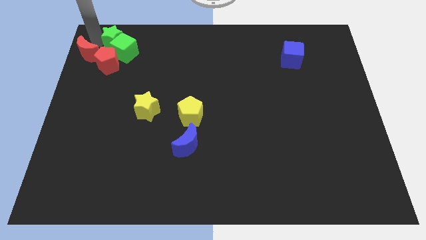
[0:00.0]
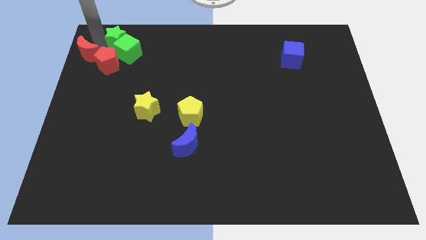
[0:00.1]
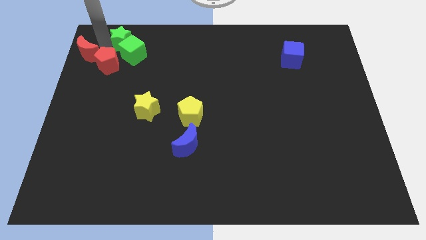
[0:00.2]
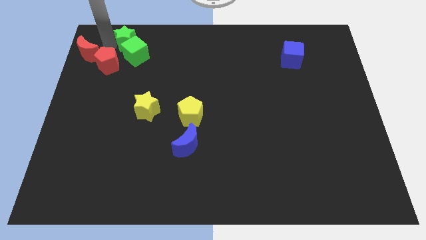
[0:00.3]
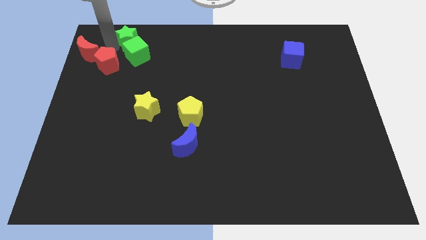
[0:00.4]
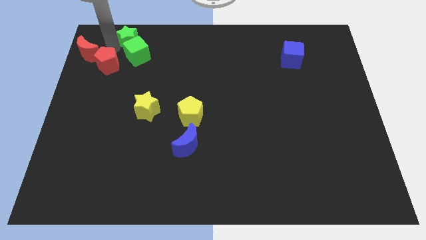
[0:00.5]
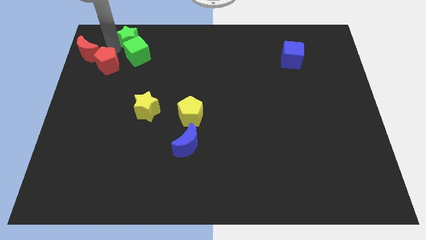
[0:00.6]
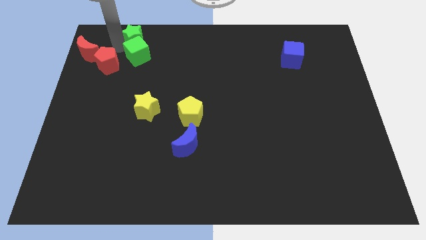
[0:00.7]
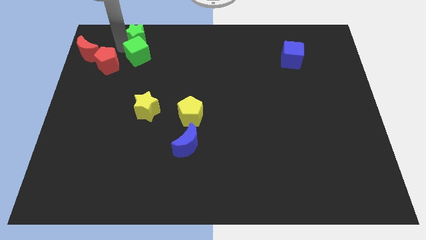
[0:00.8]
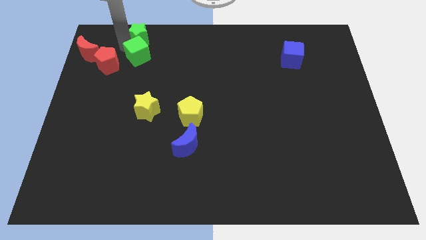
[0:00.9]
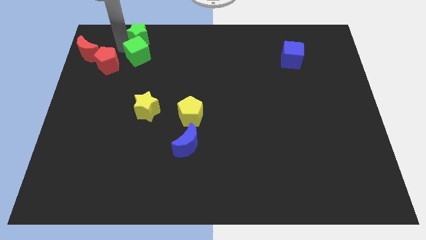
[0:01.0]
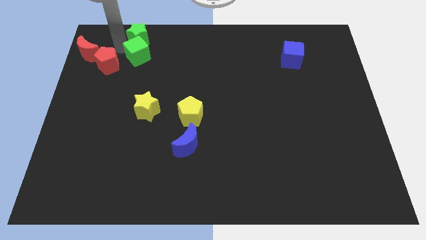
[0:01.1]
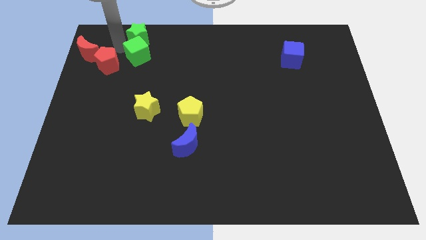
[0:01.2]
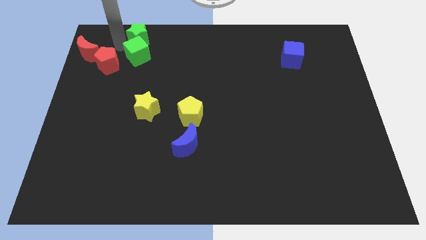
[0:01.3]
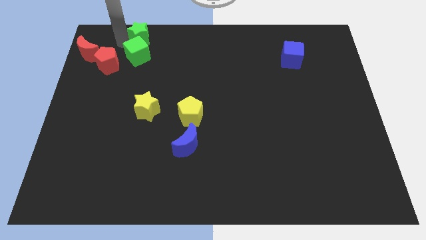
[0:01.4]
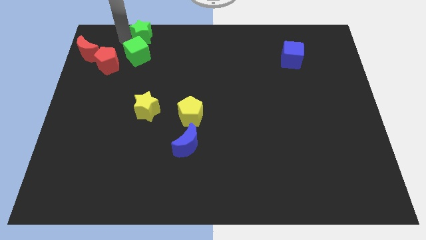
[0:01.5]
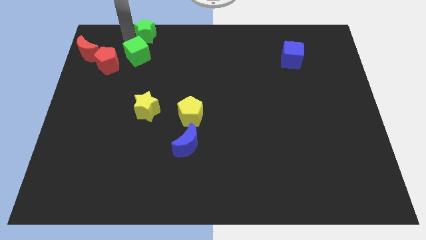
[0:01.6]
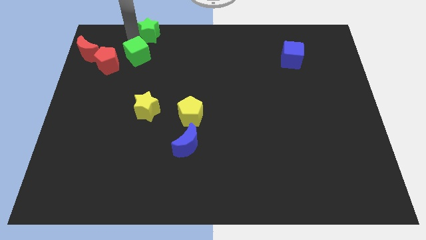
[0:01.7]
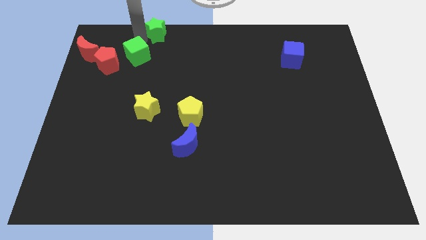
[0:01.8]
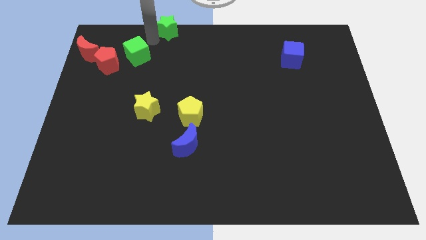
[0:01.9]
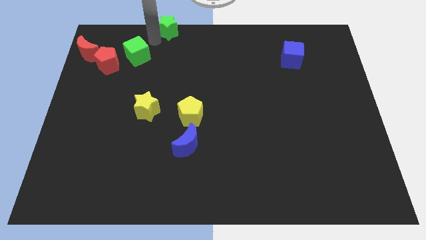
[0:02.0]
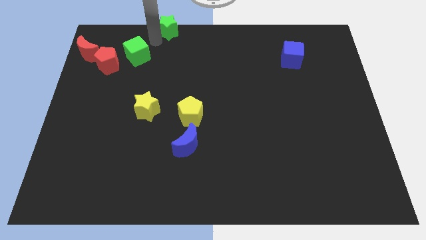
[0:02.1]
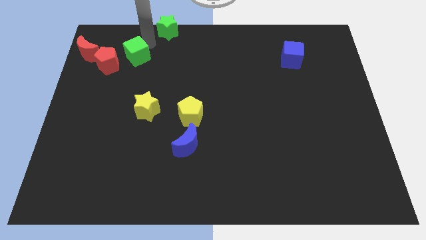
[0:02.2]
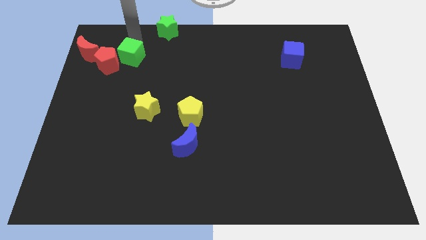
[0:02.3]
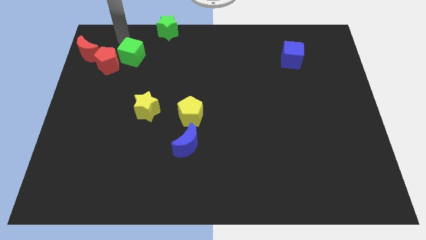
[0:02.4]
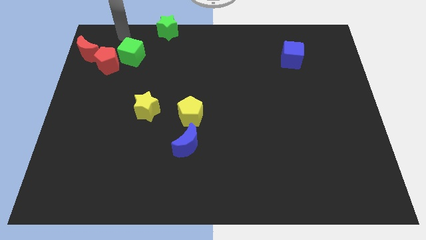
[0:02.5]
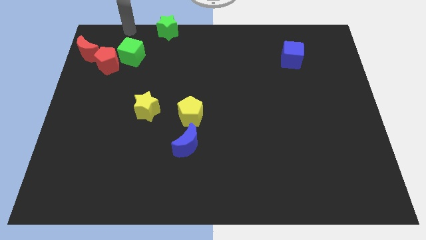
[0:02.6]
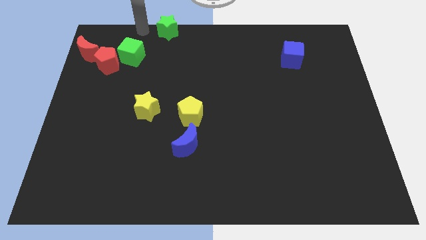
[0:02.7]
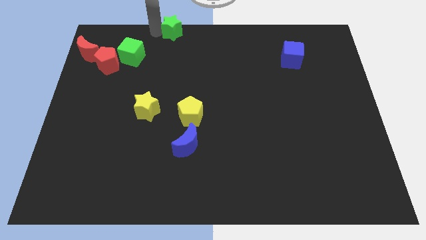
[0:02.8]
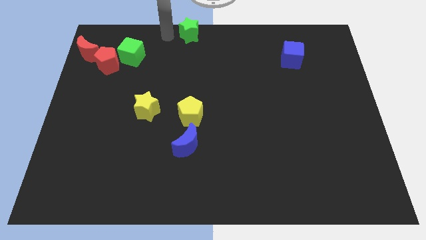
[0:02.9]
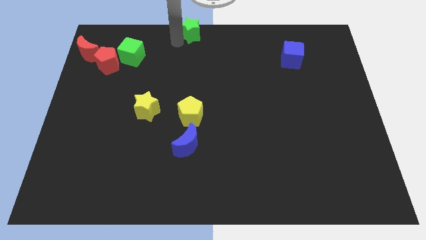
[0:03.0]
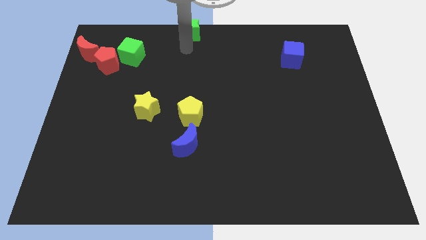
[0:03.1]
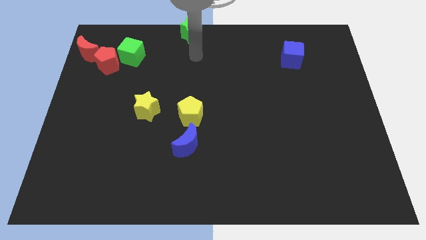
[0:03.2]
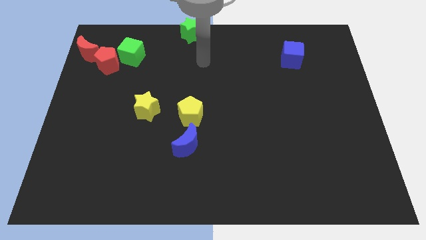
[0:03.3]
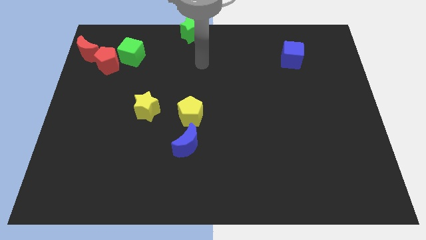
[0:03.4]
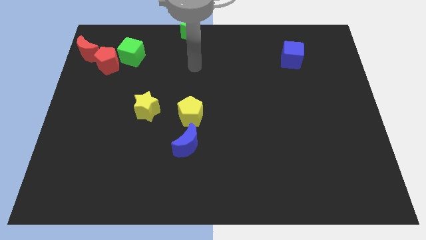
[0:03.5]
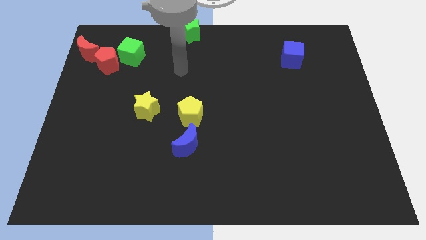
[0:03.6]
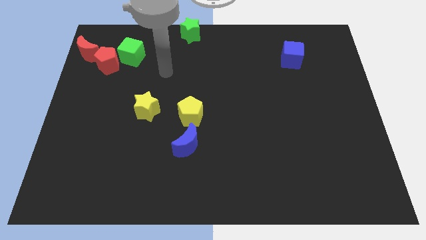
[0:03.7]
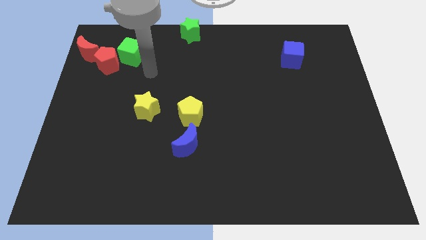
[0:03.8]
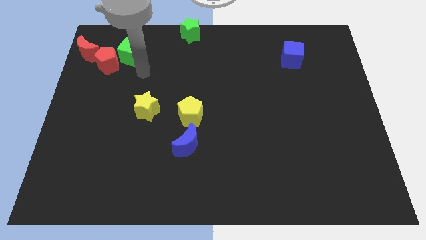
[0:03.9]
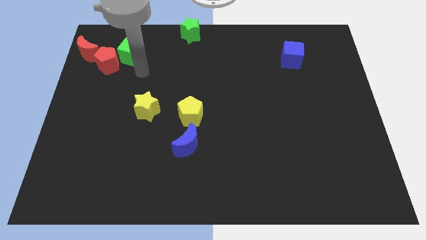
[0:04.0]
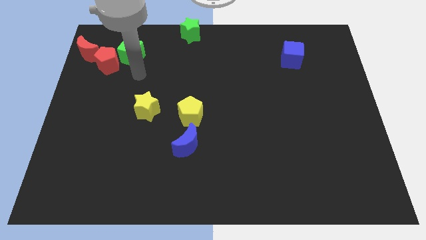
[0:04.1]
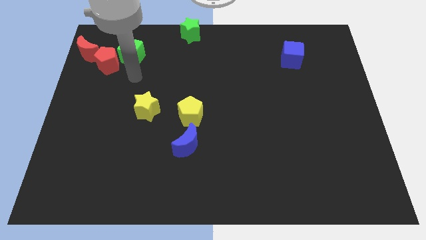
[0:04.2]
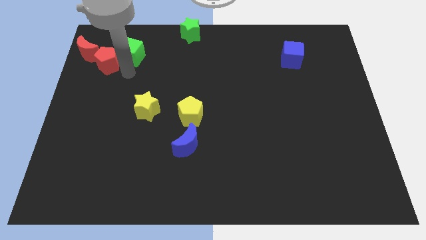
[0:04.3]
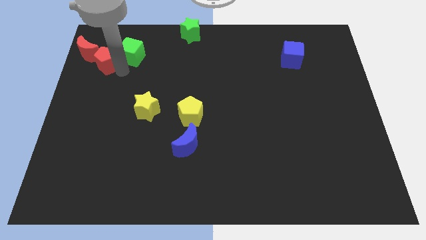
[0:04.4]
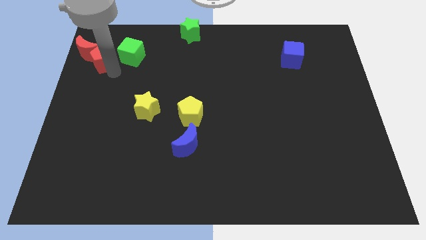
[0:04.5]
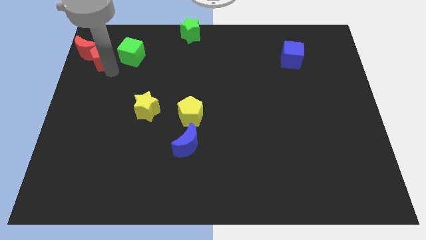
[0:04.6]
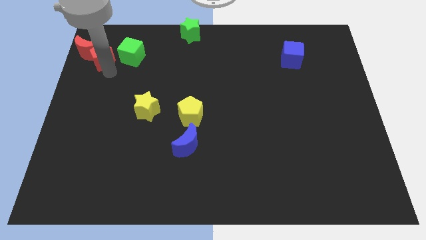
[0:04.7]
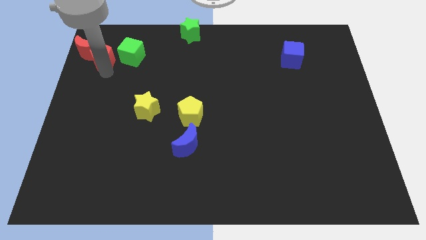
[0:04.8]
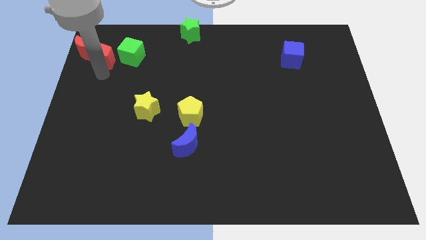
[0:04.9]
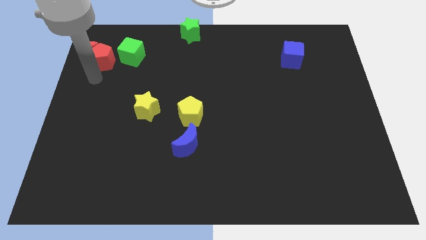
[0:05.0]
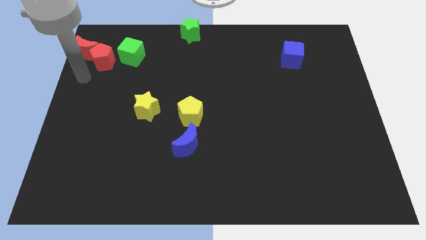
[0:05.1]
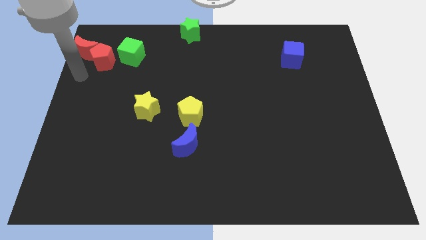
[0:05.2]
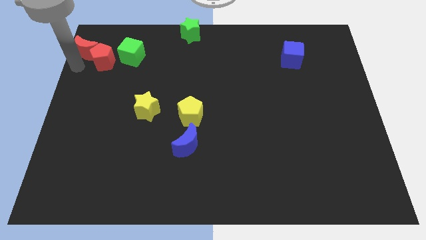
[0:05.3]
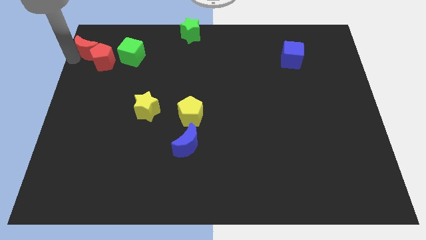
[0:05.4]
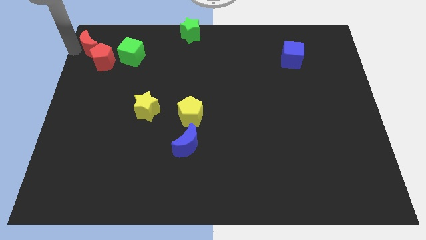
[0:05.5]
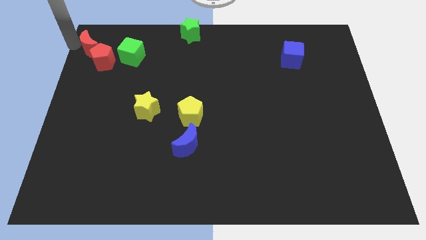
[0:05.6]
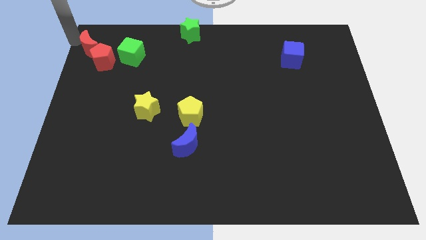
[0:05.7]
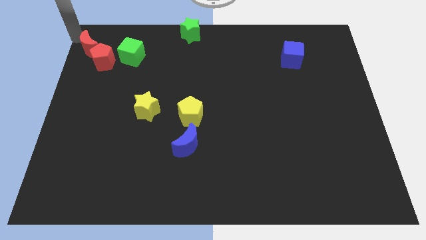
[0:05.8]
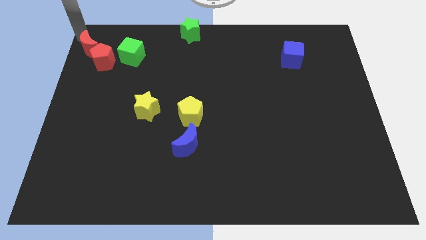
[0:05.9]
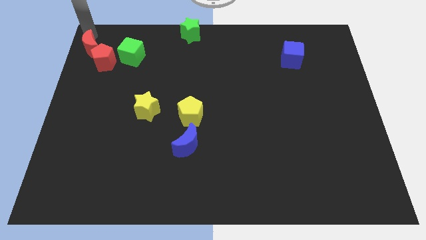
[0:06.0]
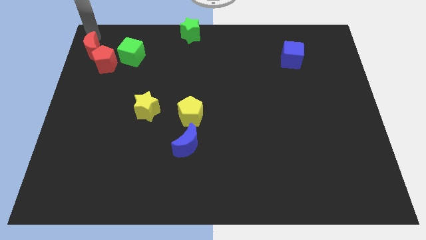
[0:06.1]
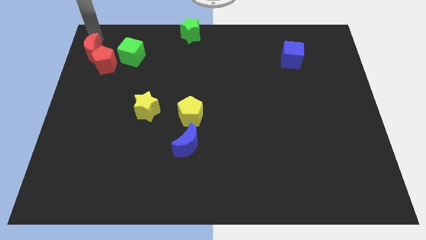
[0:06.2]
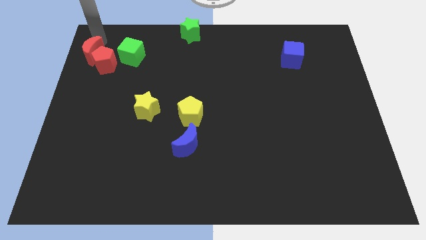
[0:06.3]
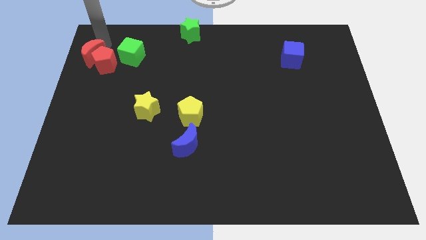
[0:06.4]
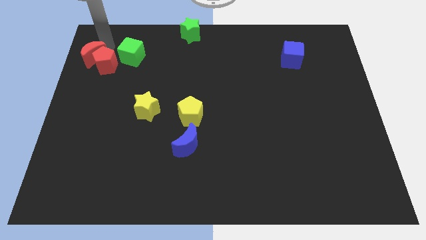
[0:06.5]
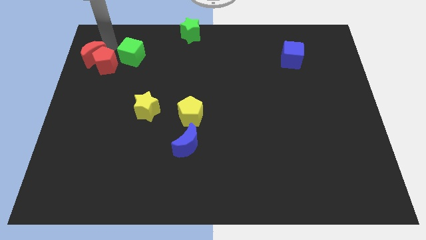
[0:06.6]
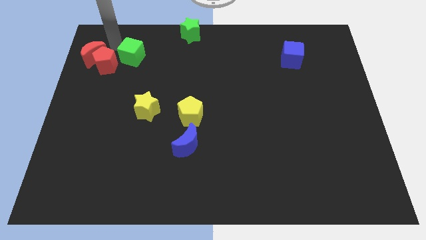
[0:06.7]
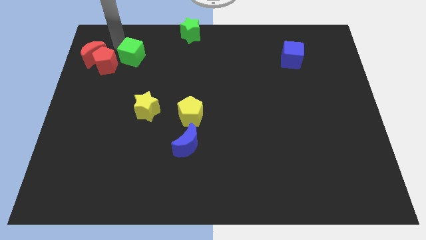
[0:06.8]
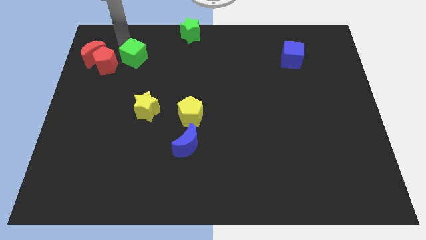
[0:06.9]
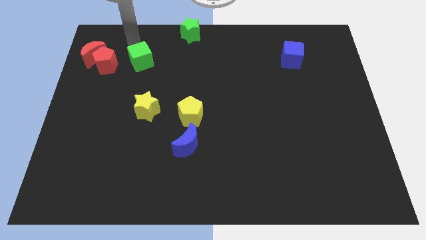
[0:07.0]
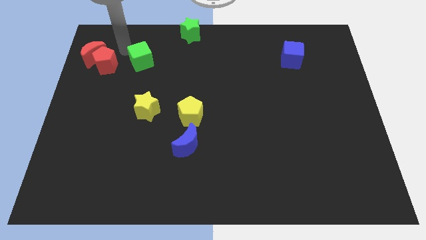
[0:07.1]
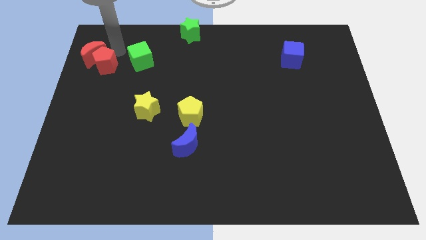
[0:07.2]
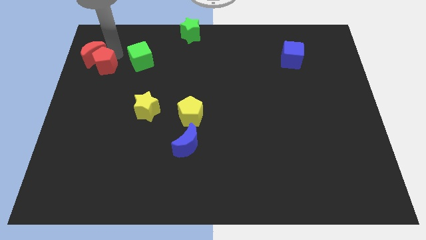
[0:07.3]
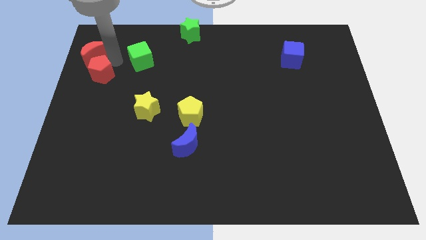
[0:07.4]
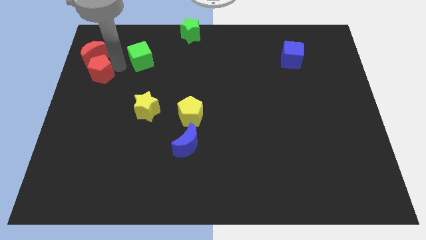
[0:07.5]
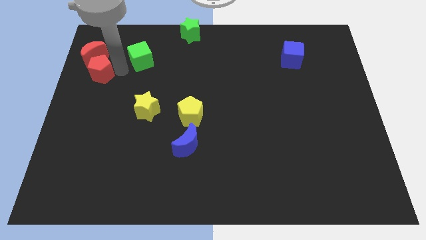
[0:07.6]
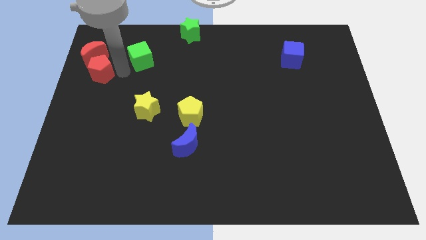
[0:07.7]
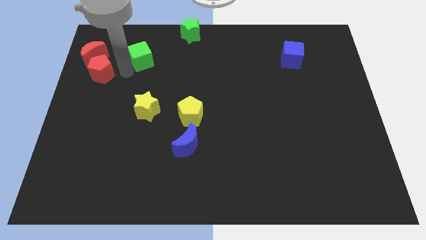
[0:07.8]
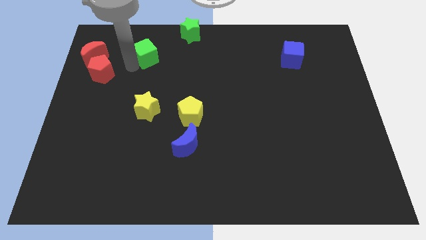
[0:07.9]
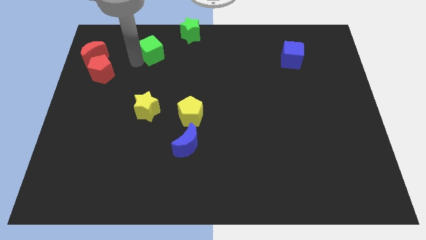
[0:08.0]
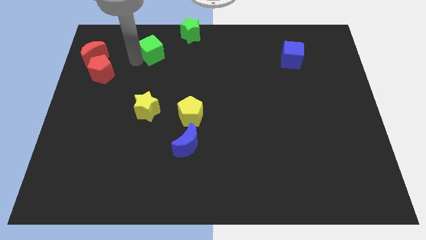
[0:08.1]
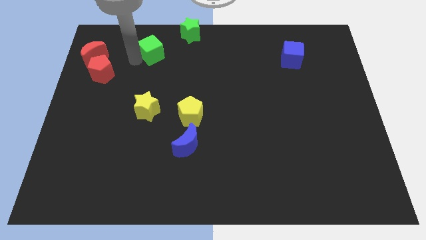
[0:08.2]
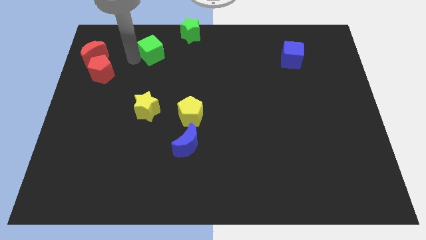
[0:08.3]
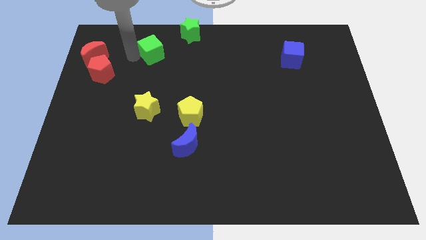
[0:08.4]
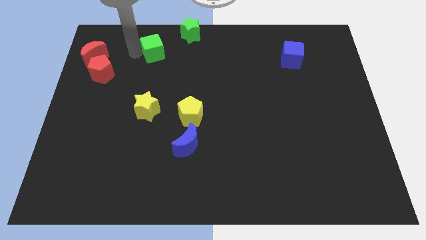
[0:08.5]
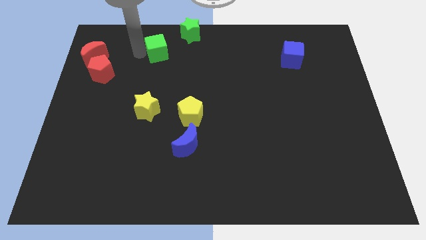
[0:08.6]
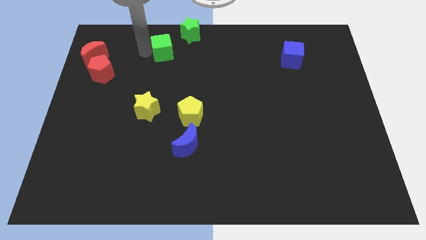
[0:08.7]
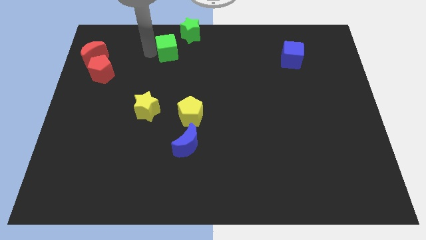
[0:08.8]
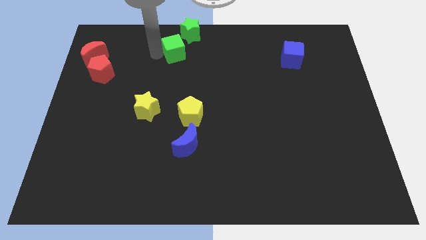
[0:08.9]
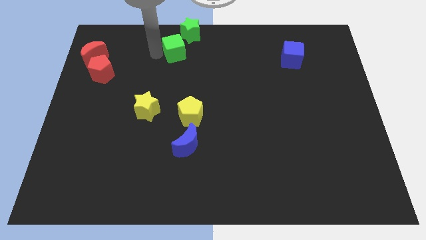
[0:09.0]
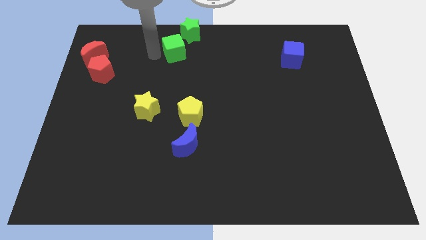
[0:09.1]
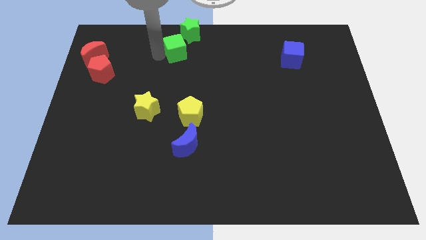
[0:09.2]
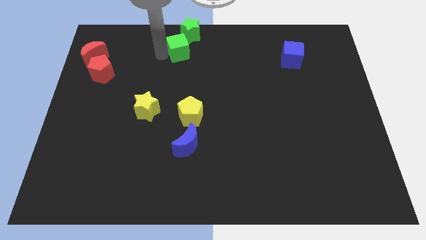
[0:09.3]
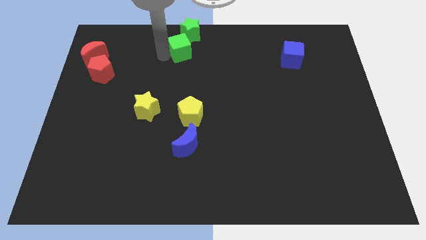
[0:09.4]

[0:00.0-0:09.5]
separate green blocks from the red blocks
